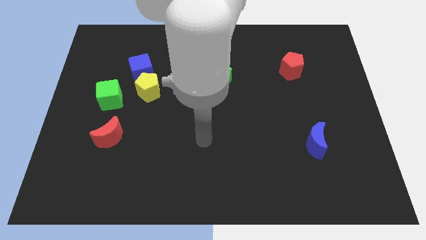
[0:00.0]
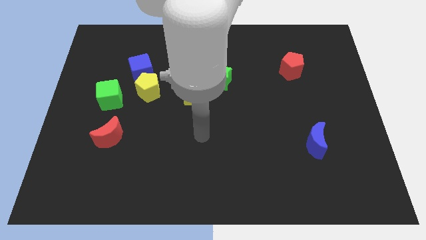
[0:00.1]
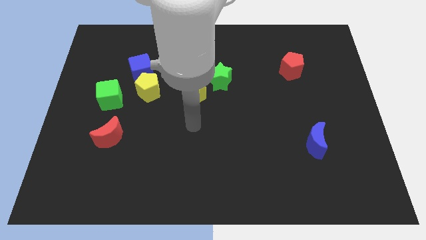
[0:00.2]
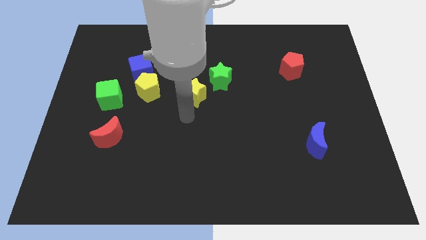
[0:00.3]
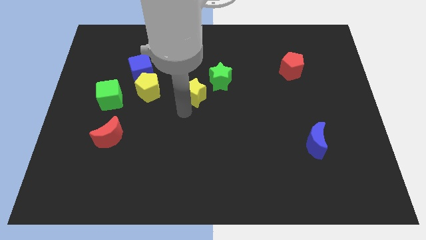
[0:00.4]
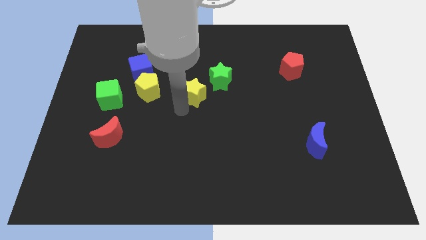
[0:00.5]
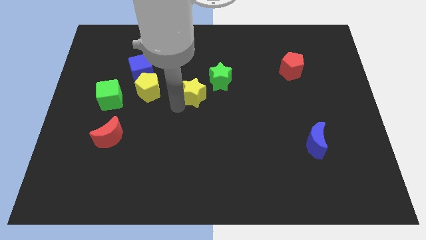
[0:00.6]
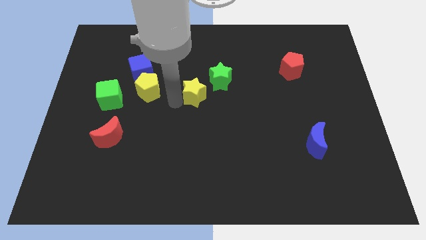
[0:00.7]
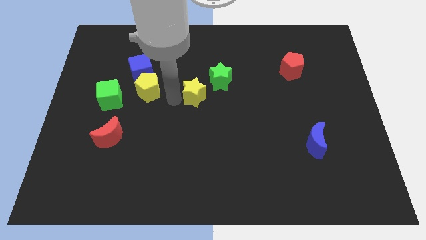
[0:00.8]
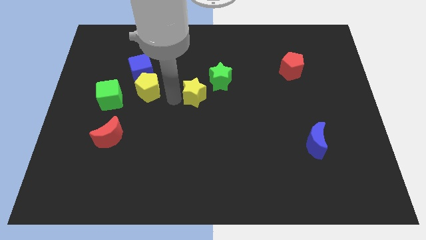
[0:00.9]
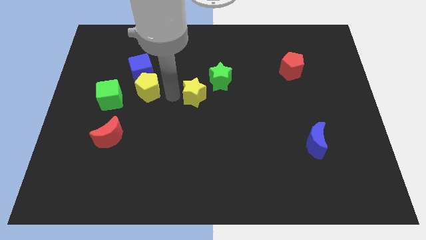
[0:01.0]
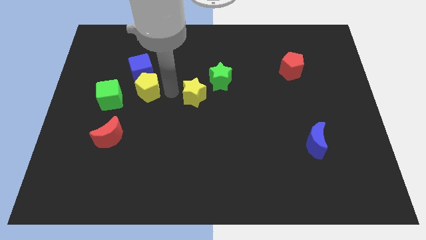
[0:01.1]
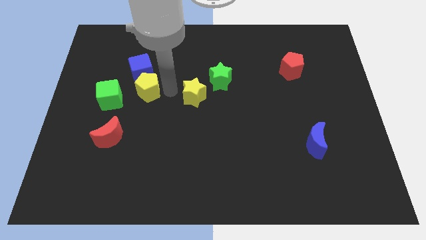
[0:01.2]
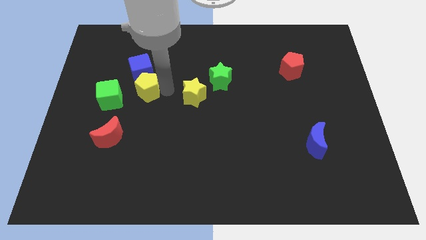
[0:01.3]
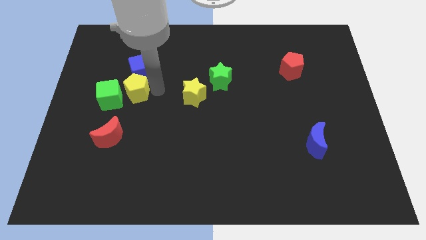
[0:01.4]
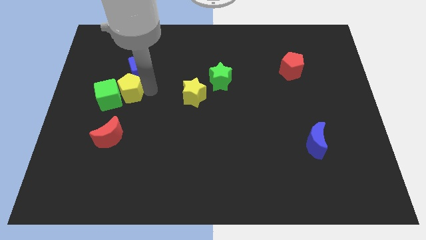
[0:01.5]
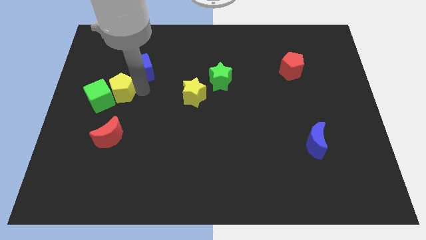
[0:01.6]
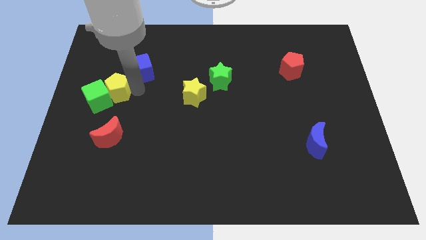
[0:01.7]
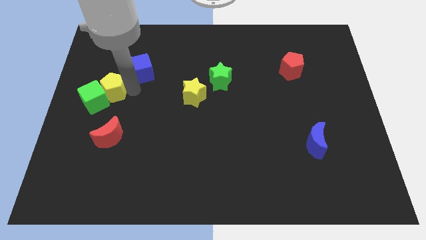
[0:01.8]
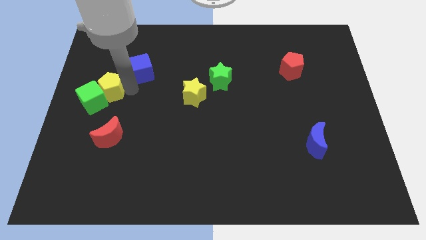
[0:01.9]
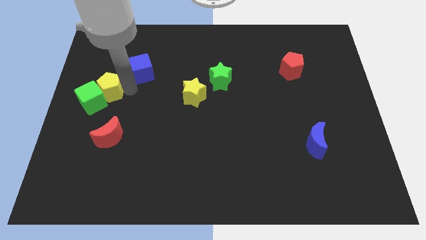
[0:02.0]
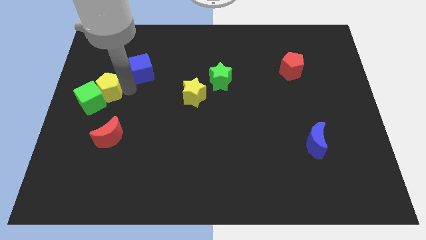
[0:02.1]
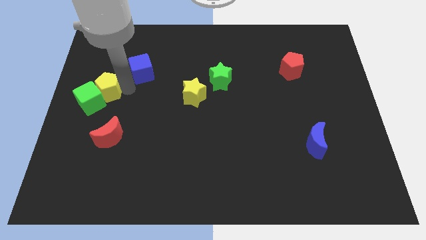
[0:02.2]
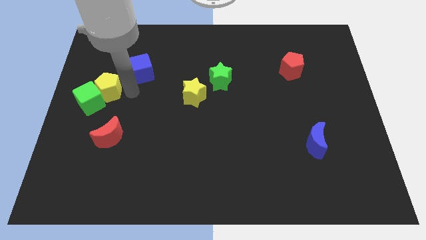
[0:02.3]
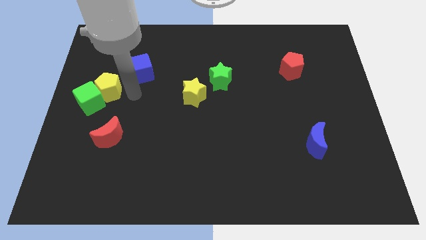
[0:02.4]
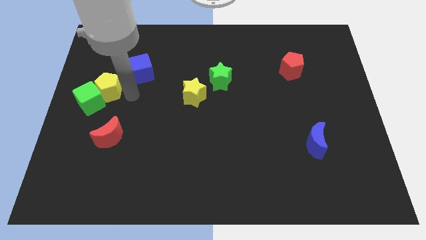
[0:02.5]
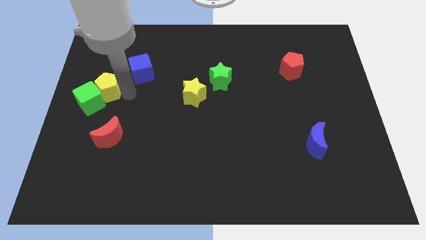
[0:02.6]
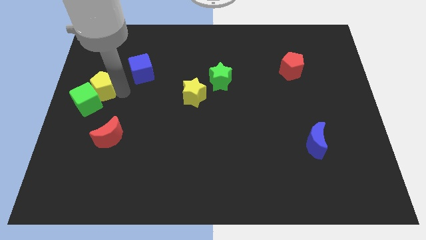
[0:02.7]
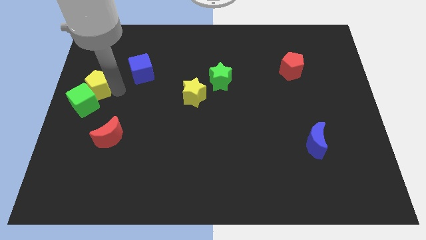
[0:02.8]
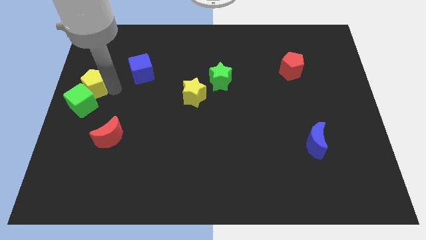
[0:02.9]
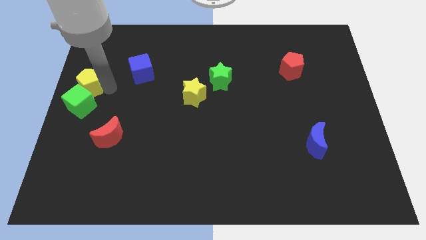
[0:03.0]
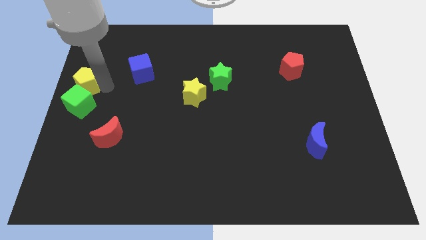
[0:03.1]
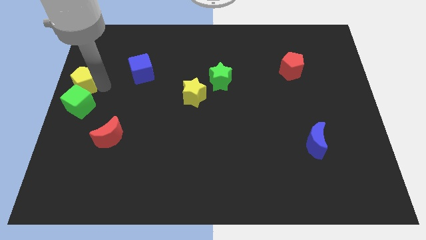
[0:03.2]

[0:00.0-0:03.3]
move the yellow pentagon towards the left center of the board

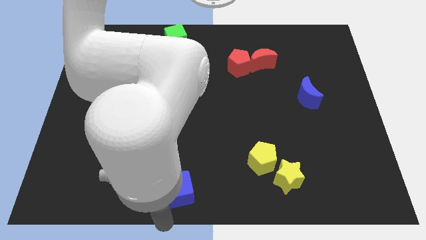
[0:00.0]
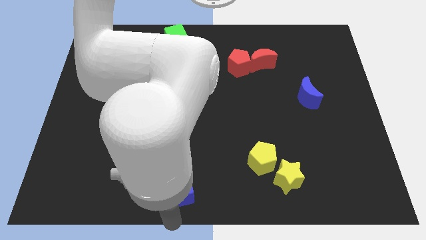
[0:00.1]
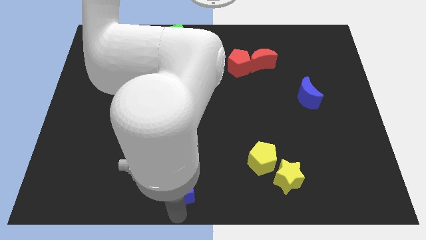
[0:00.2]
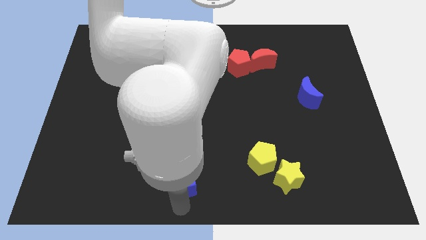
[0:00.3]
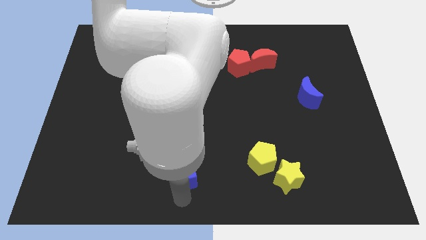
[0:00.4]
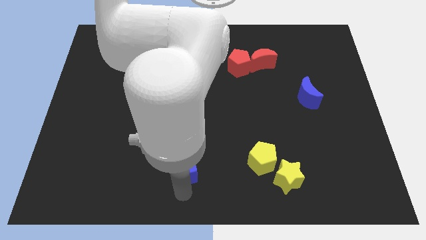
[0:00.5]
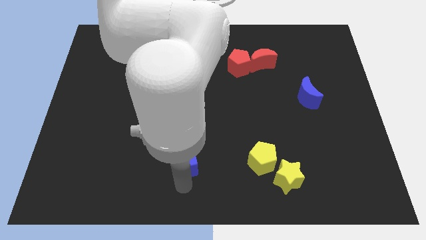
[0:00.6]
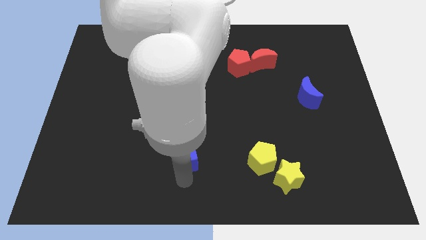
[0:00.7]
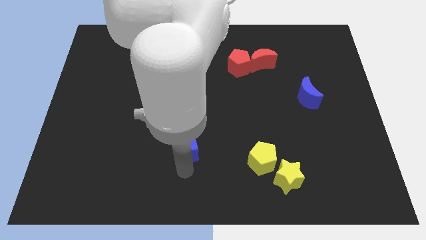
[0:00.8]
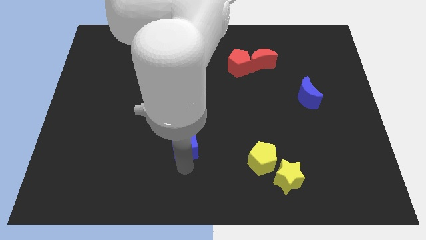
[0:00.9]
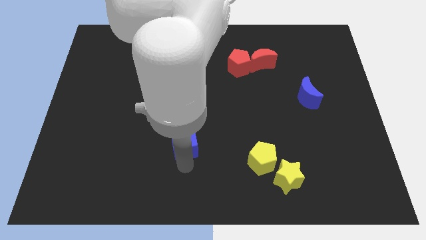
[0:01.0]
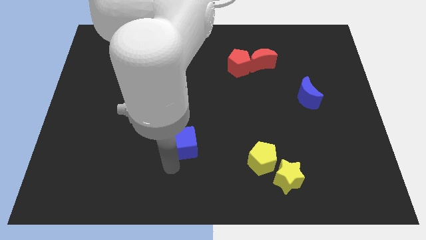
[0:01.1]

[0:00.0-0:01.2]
put the blue cube left to the yellow pentagon

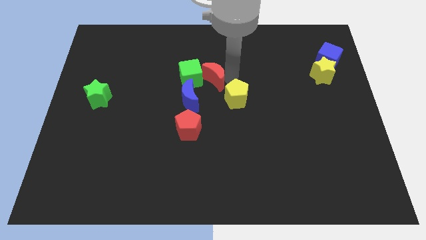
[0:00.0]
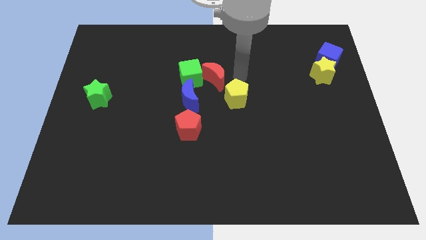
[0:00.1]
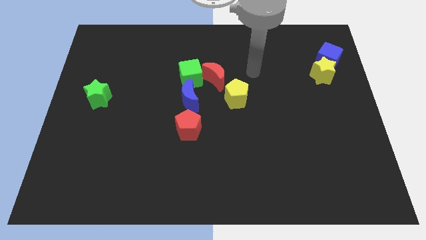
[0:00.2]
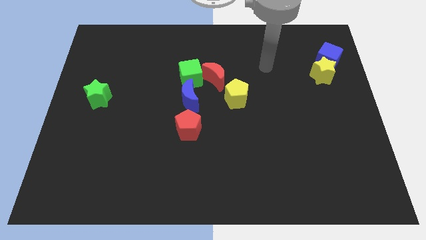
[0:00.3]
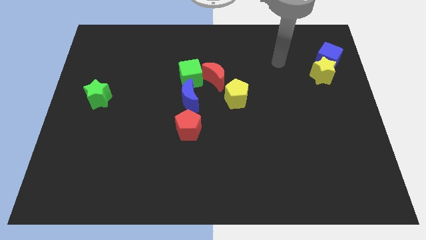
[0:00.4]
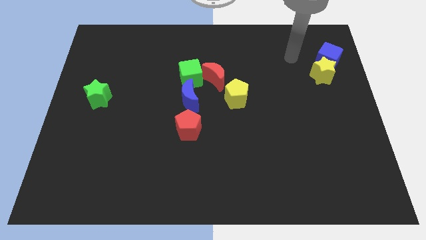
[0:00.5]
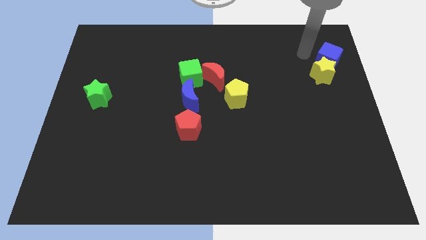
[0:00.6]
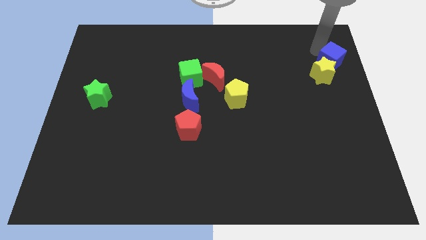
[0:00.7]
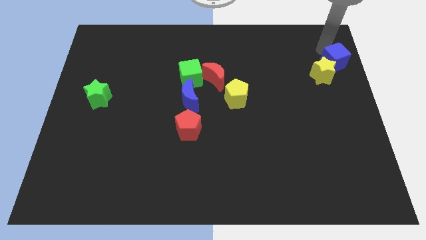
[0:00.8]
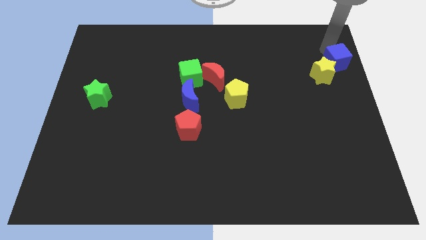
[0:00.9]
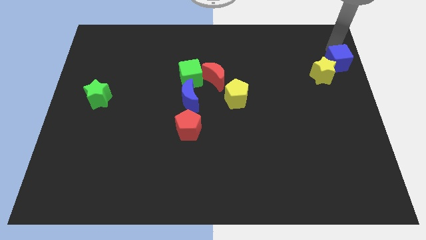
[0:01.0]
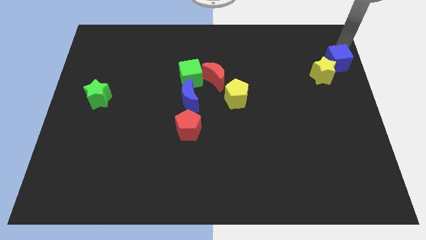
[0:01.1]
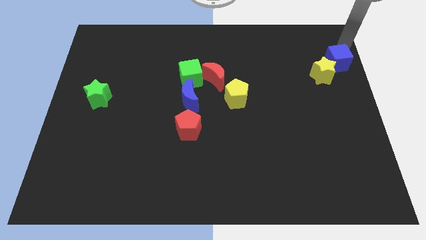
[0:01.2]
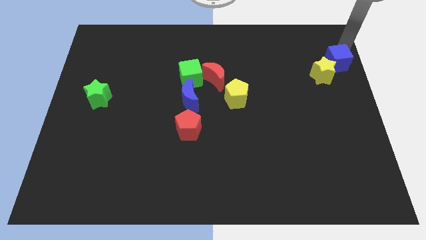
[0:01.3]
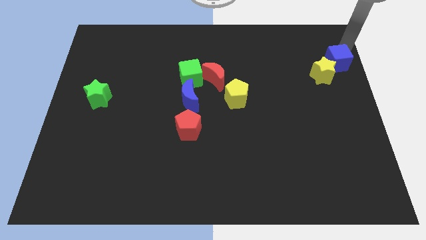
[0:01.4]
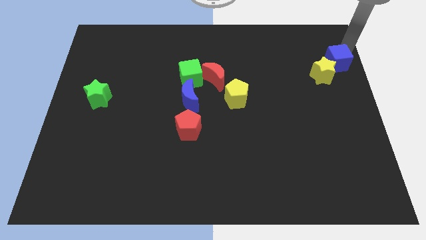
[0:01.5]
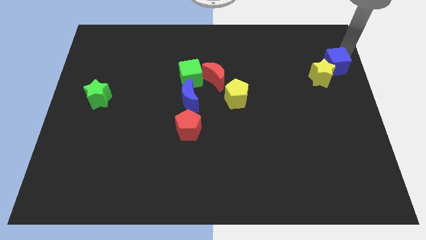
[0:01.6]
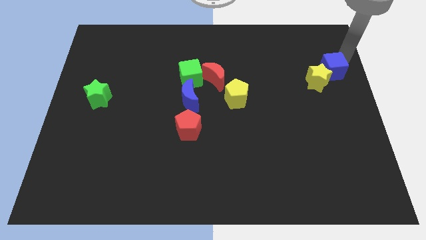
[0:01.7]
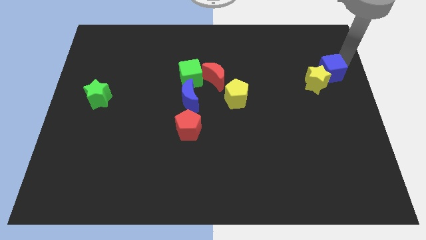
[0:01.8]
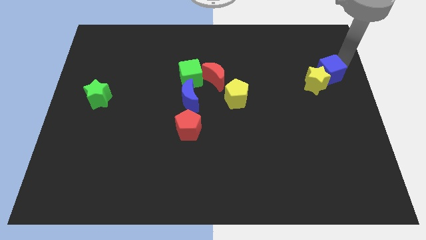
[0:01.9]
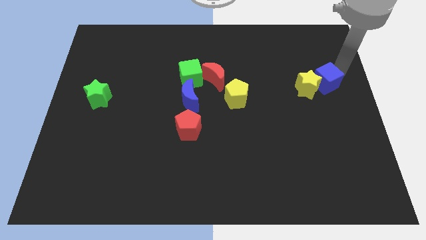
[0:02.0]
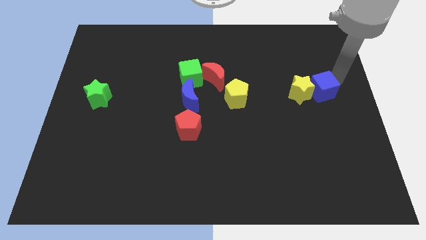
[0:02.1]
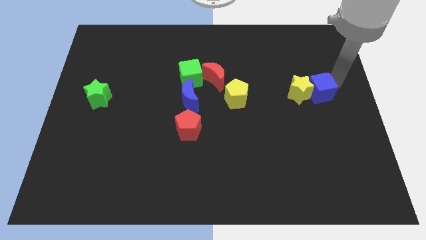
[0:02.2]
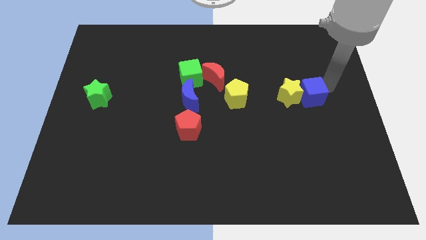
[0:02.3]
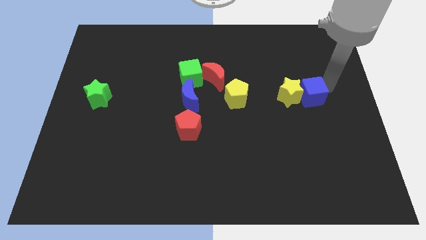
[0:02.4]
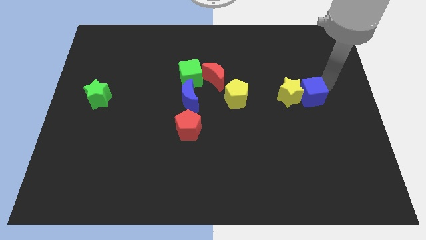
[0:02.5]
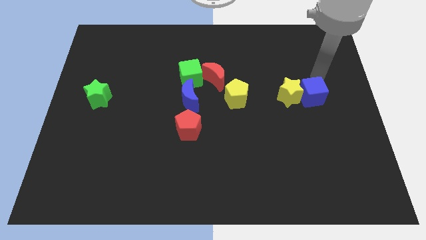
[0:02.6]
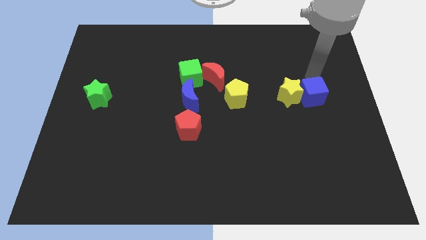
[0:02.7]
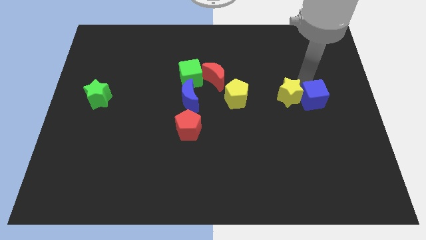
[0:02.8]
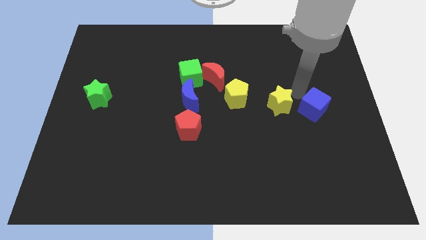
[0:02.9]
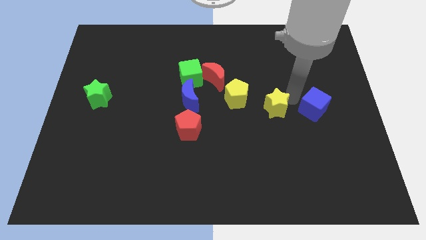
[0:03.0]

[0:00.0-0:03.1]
push blue cube along with the yellow star to the bottom

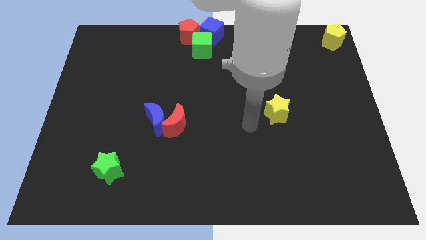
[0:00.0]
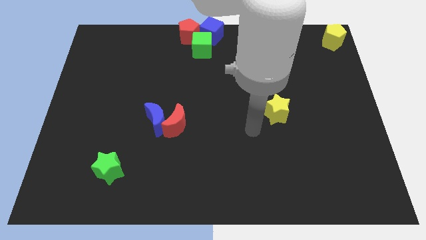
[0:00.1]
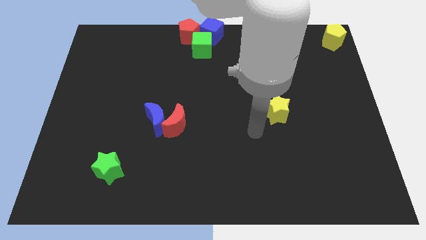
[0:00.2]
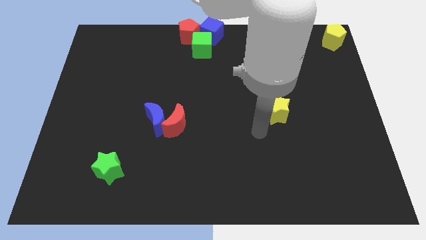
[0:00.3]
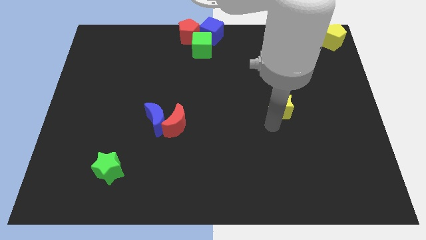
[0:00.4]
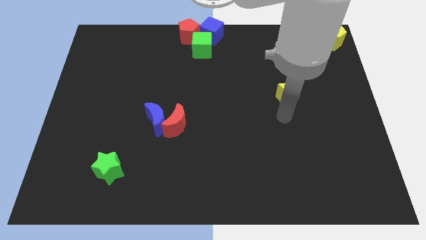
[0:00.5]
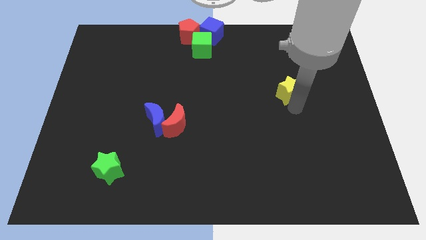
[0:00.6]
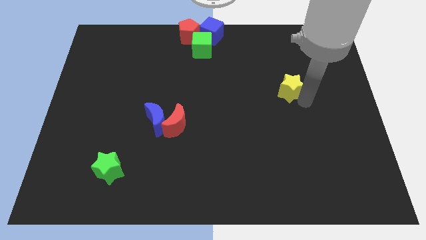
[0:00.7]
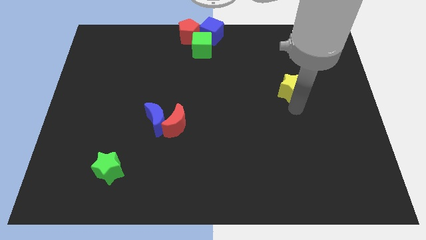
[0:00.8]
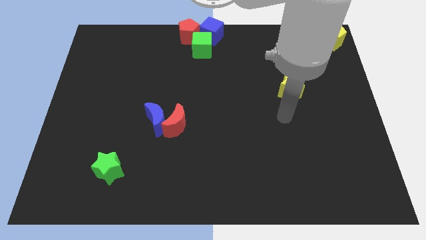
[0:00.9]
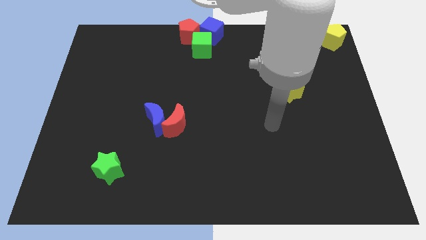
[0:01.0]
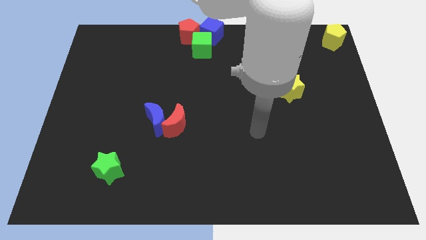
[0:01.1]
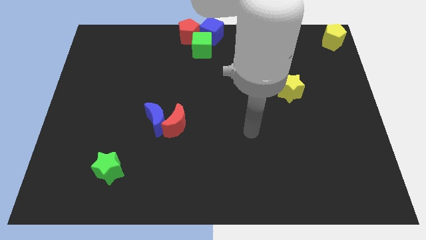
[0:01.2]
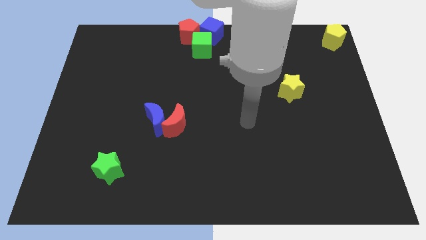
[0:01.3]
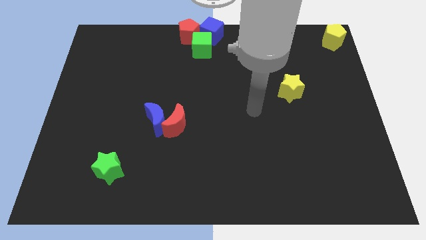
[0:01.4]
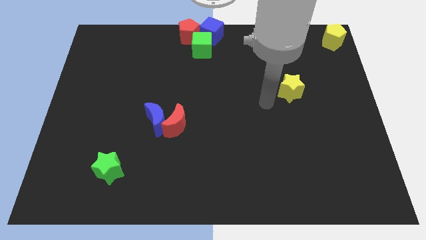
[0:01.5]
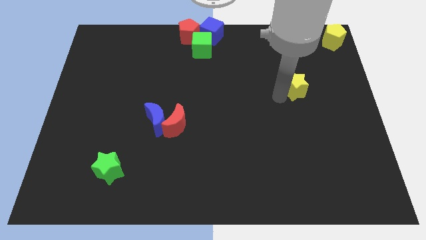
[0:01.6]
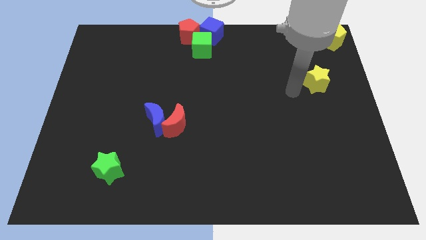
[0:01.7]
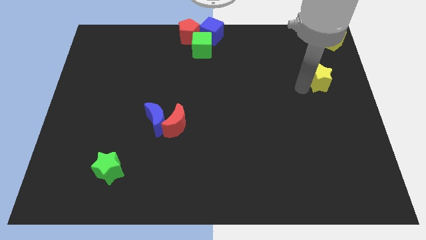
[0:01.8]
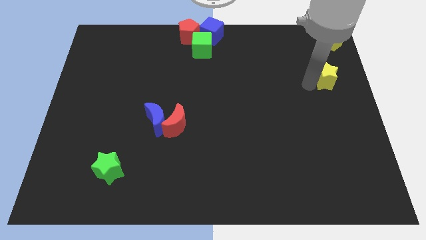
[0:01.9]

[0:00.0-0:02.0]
move yellow star towards yellow pentagon
